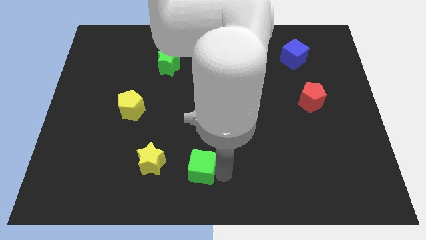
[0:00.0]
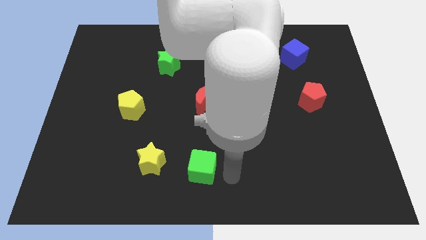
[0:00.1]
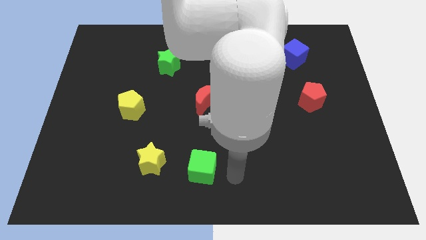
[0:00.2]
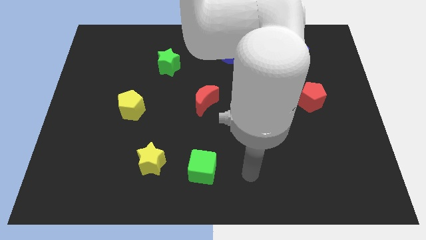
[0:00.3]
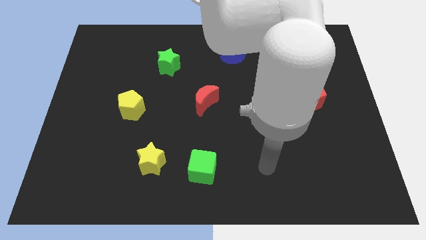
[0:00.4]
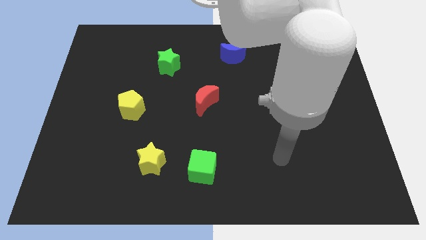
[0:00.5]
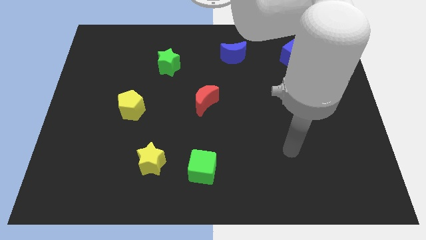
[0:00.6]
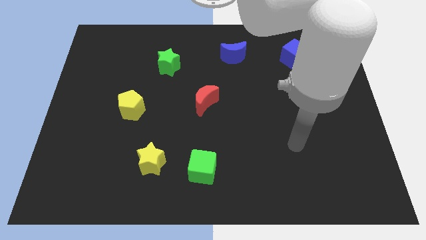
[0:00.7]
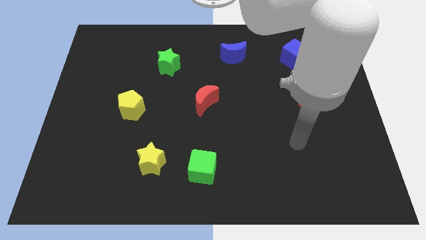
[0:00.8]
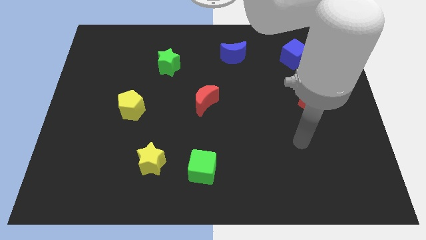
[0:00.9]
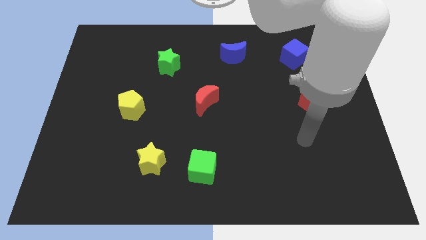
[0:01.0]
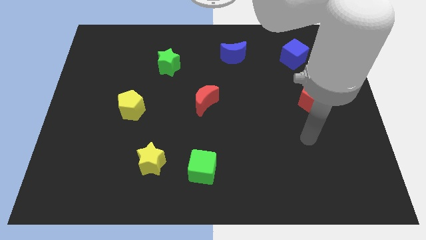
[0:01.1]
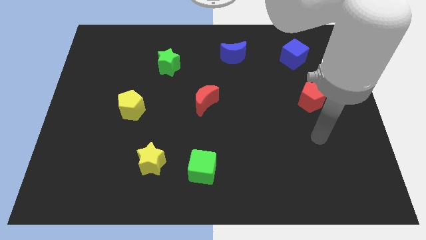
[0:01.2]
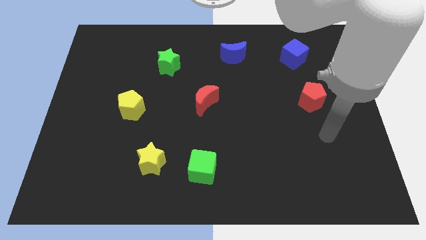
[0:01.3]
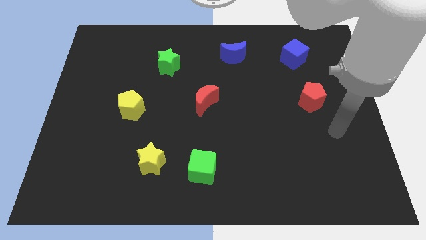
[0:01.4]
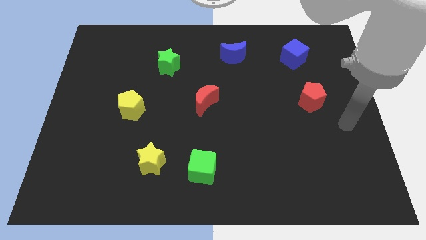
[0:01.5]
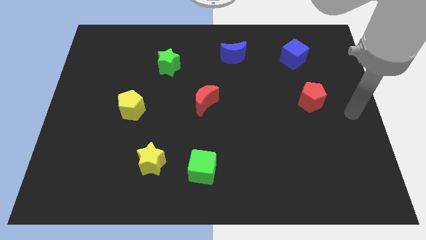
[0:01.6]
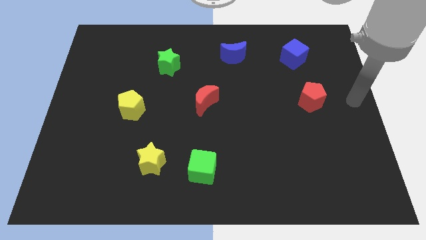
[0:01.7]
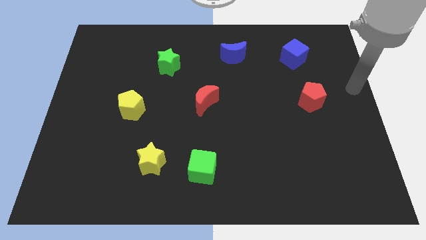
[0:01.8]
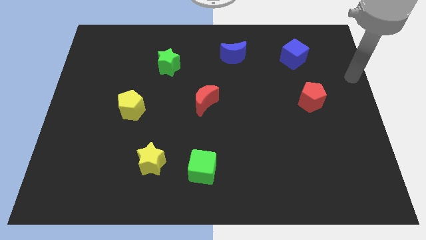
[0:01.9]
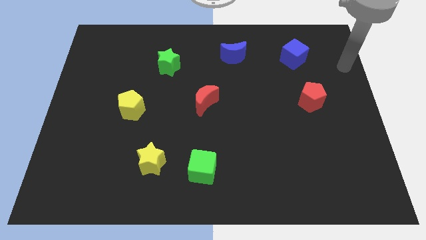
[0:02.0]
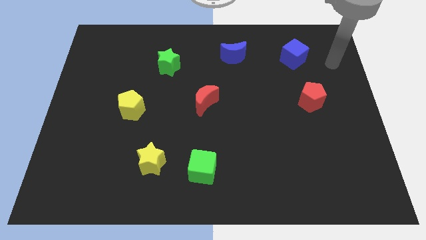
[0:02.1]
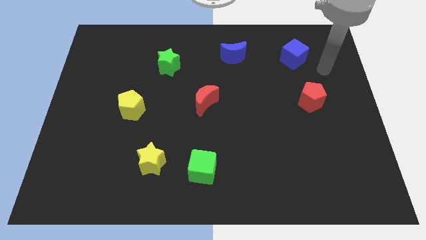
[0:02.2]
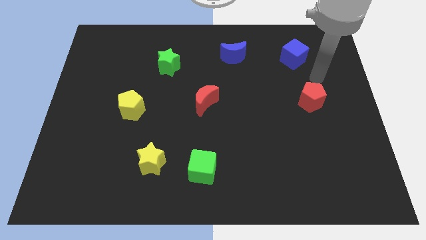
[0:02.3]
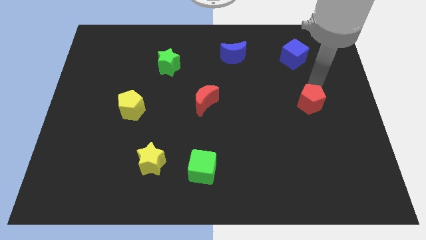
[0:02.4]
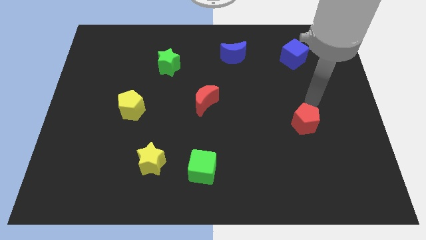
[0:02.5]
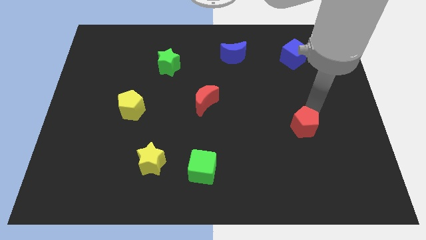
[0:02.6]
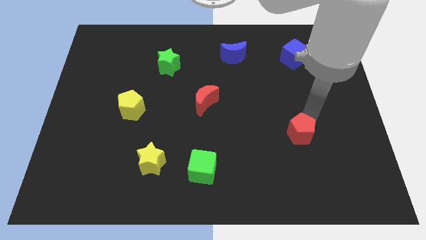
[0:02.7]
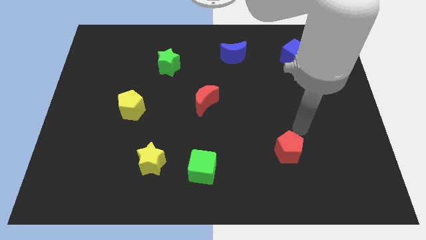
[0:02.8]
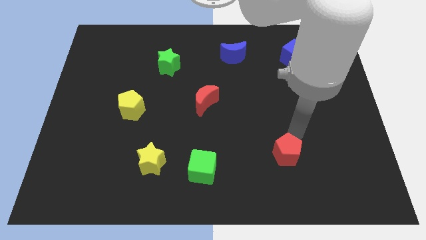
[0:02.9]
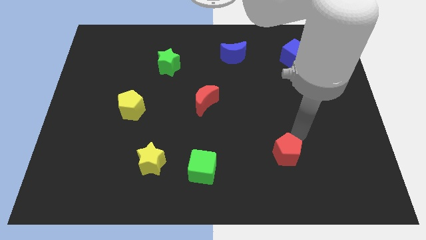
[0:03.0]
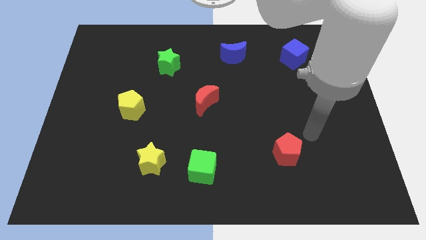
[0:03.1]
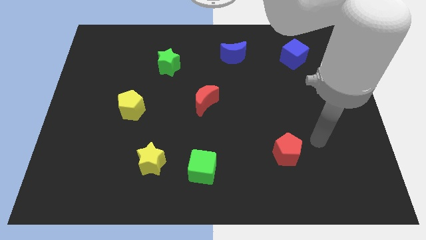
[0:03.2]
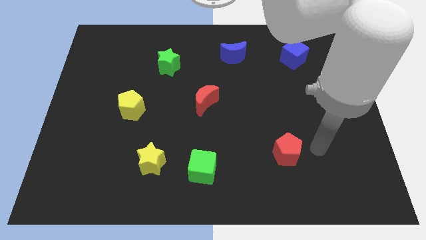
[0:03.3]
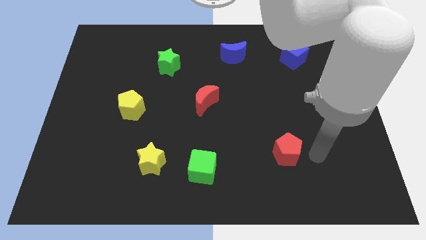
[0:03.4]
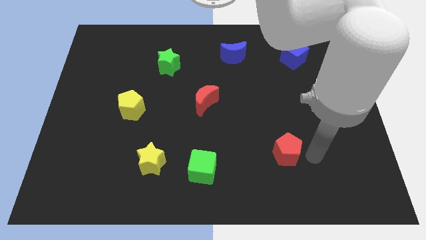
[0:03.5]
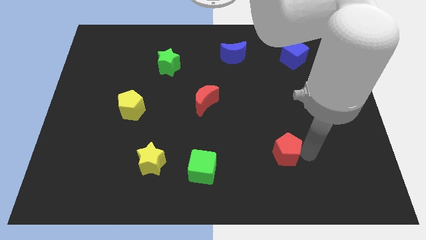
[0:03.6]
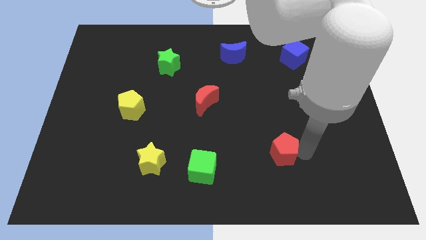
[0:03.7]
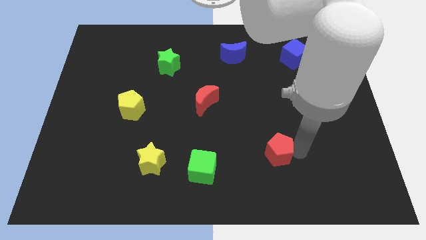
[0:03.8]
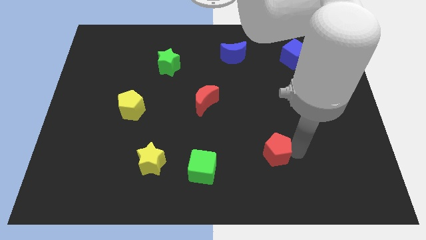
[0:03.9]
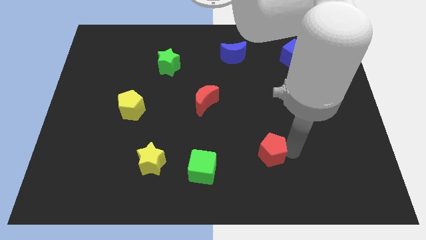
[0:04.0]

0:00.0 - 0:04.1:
move the red pentagon towards the right side of the green cube

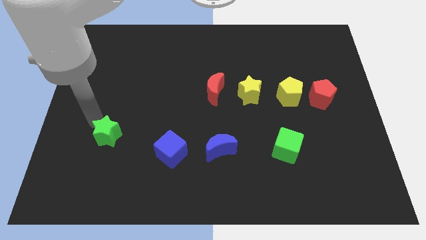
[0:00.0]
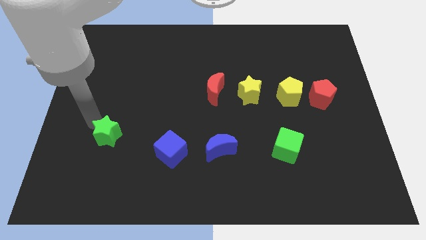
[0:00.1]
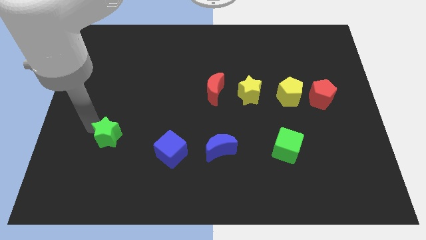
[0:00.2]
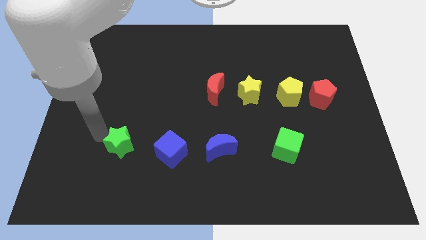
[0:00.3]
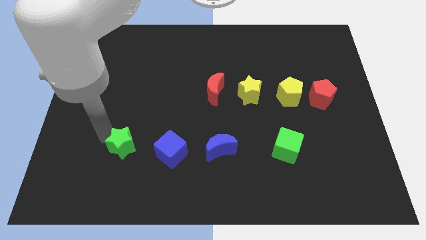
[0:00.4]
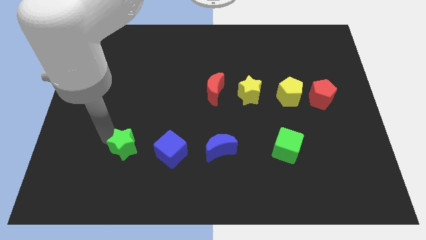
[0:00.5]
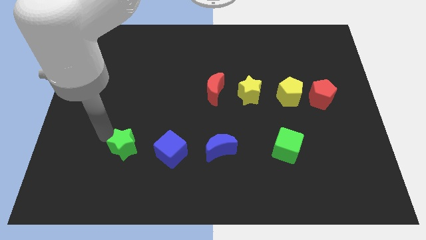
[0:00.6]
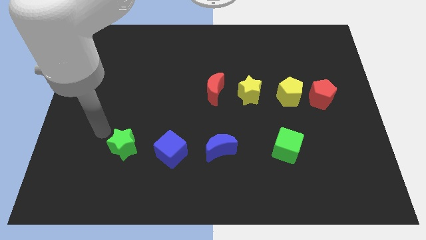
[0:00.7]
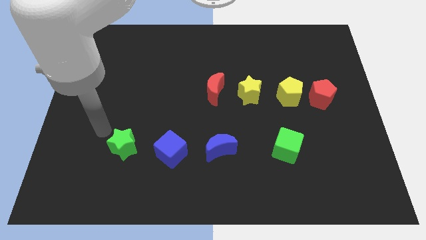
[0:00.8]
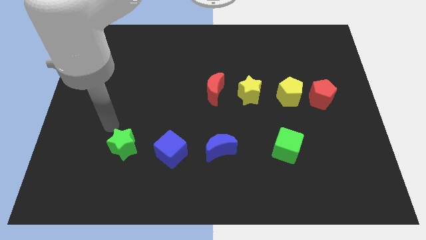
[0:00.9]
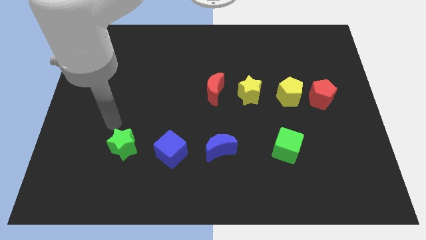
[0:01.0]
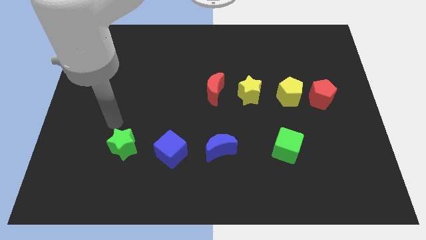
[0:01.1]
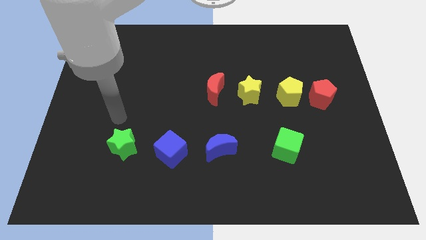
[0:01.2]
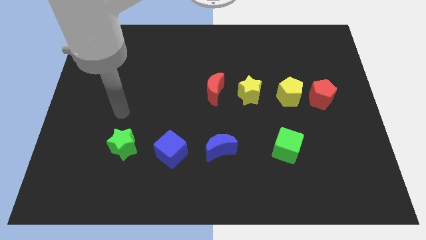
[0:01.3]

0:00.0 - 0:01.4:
push the green star to the left of the blue cube

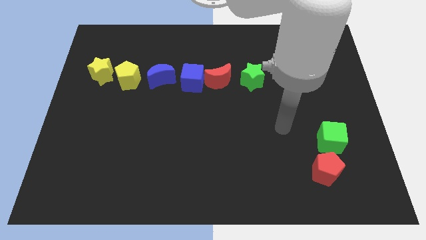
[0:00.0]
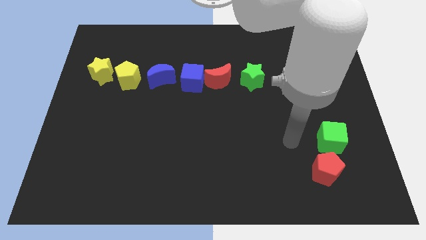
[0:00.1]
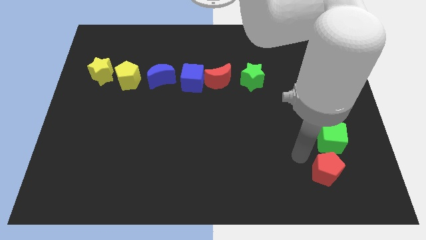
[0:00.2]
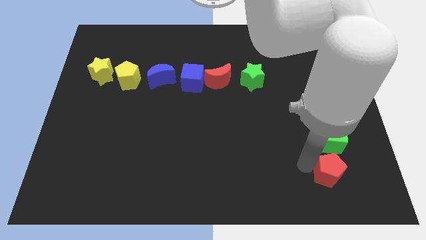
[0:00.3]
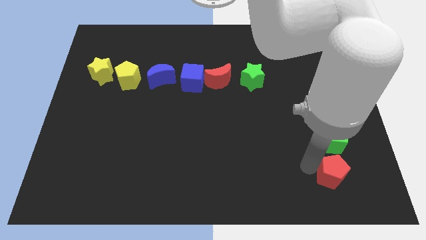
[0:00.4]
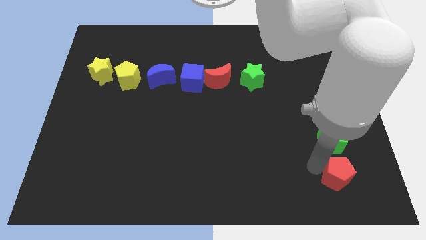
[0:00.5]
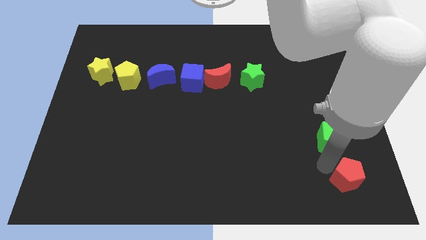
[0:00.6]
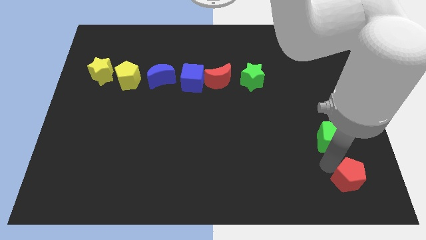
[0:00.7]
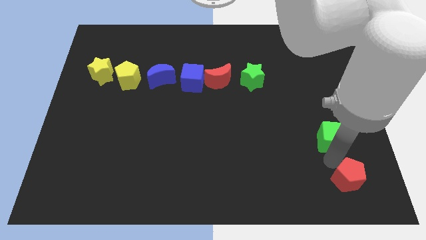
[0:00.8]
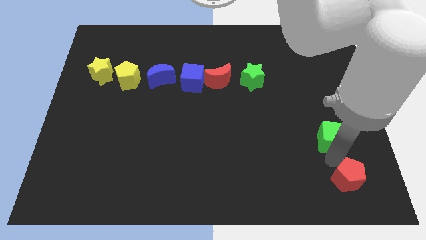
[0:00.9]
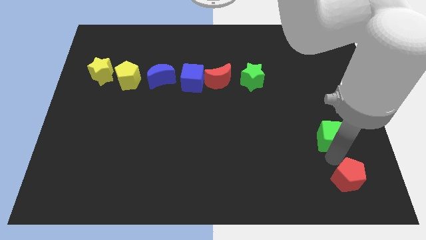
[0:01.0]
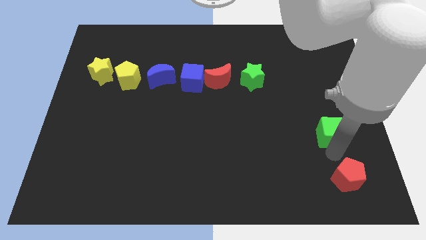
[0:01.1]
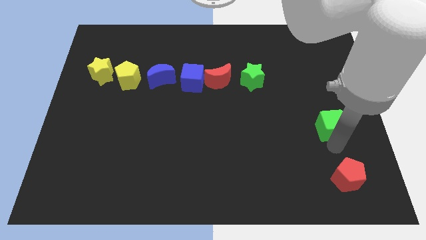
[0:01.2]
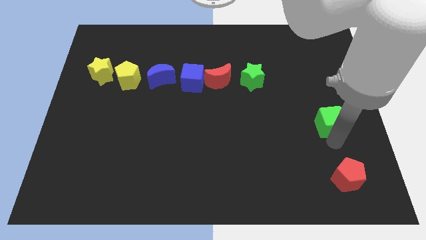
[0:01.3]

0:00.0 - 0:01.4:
separate the green cube from red pentagon

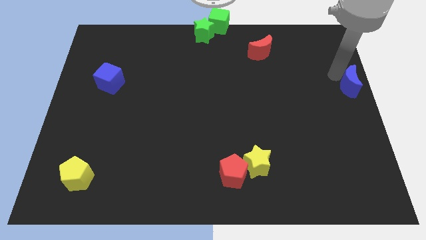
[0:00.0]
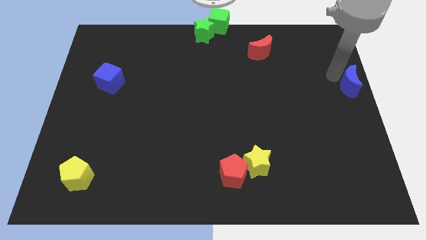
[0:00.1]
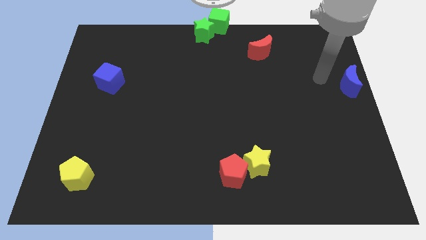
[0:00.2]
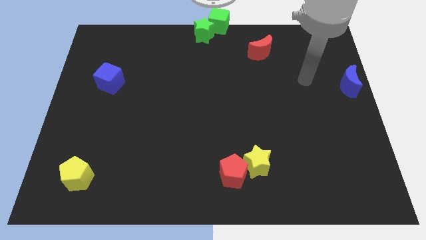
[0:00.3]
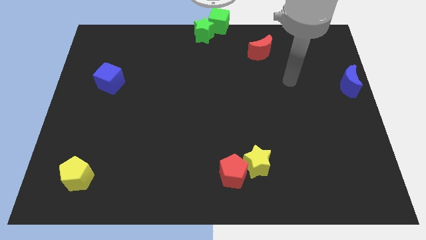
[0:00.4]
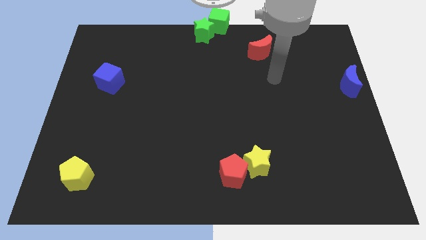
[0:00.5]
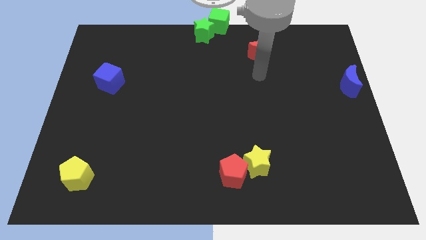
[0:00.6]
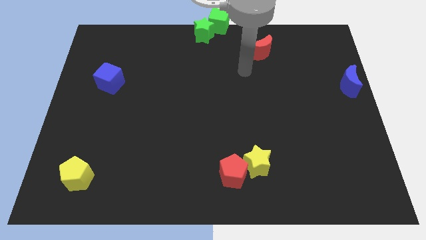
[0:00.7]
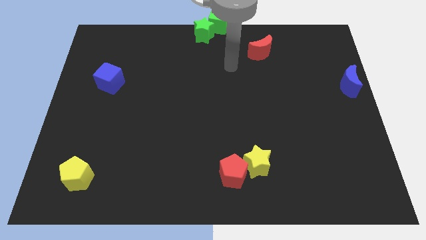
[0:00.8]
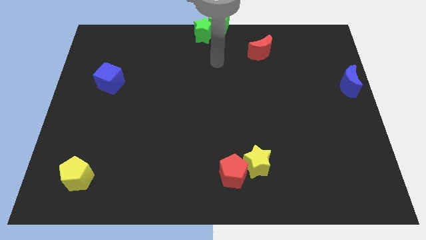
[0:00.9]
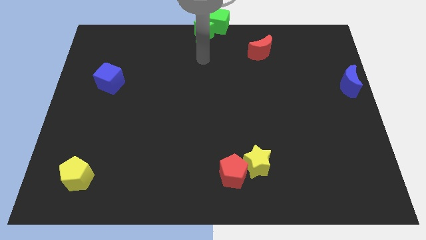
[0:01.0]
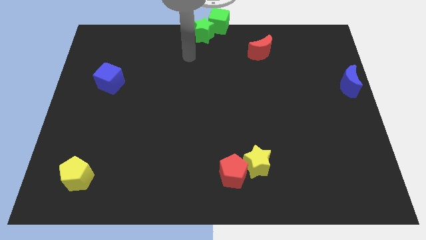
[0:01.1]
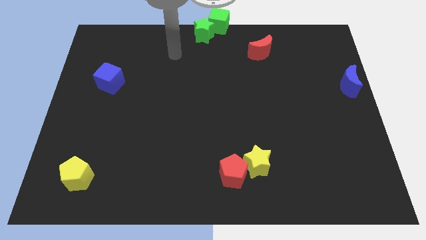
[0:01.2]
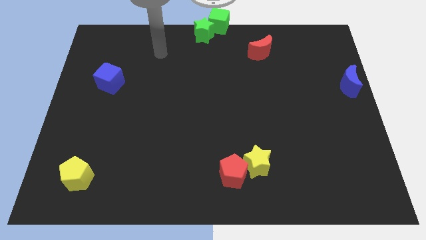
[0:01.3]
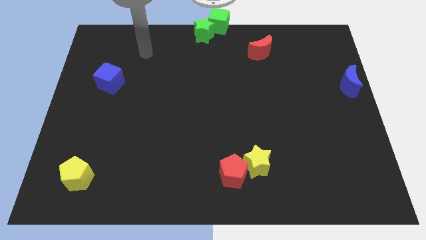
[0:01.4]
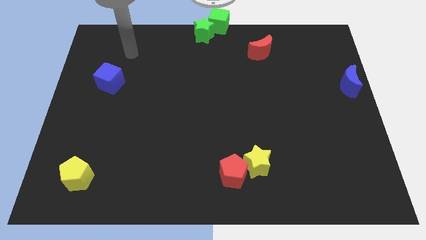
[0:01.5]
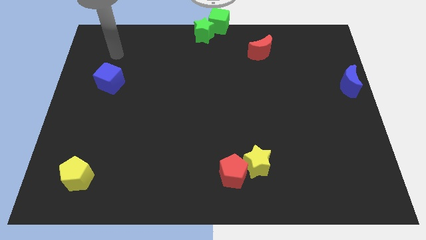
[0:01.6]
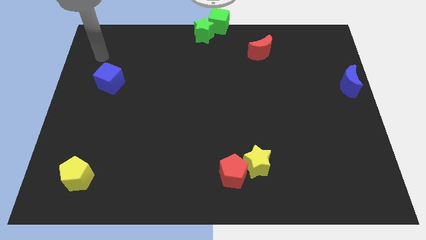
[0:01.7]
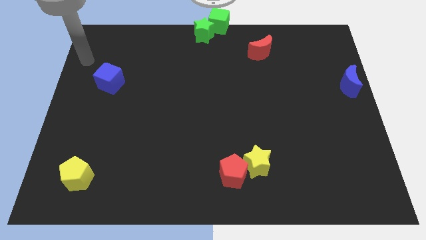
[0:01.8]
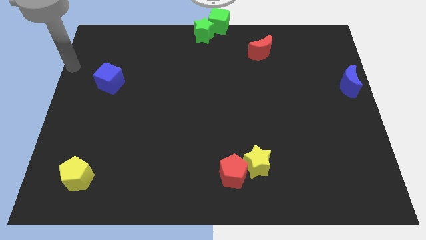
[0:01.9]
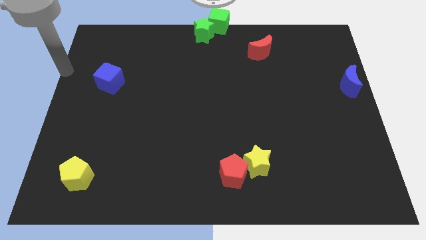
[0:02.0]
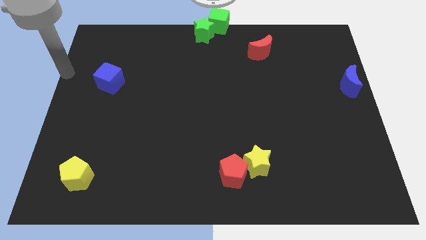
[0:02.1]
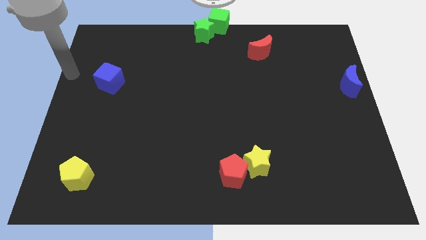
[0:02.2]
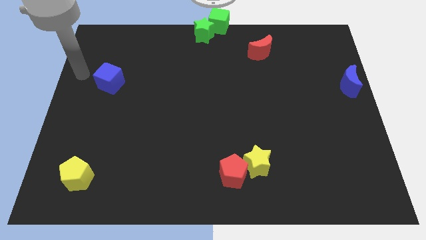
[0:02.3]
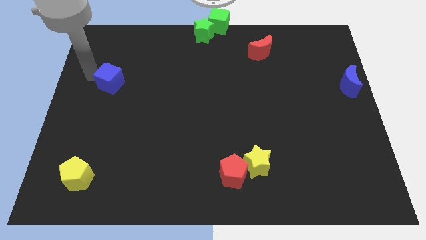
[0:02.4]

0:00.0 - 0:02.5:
move your arm close to the blue cube
